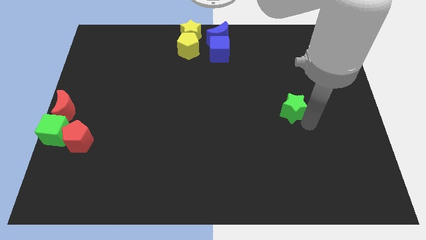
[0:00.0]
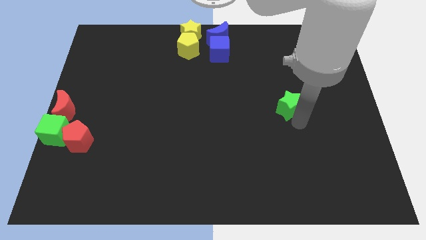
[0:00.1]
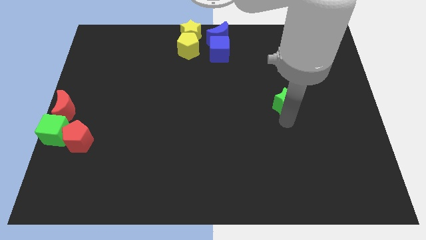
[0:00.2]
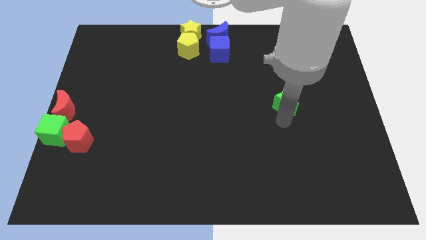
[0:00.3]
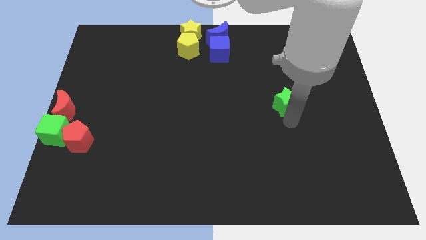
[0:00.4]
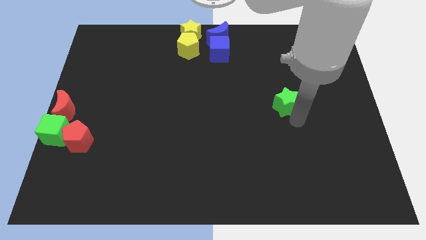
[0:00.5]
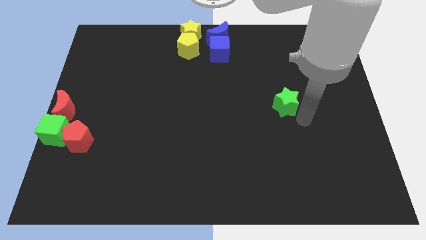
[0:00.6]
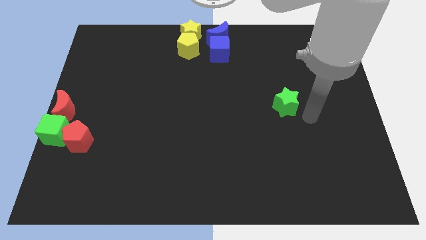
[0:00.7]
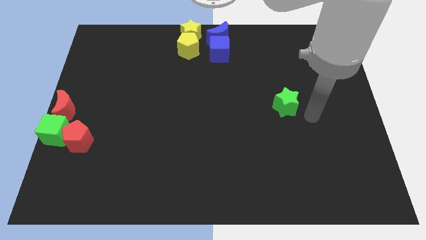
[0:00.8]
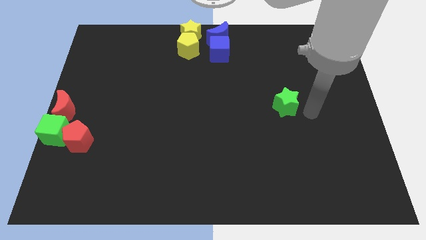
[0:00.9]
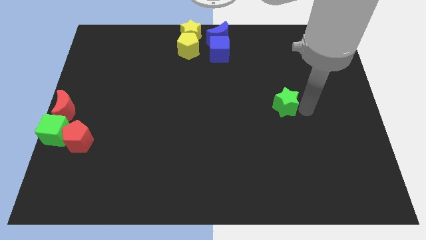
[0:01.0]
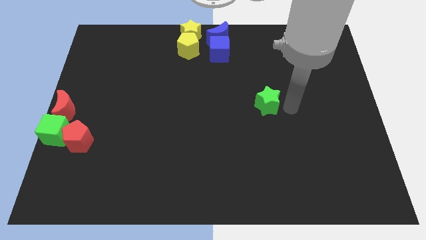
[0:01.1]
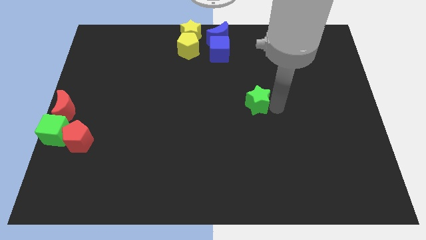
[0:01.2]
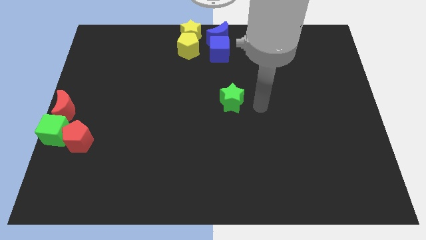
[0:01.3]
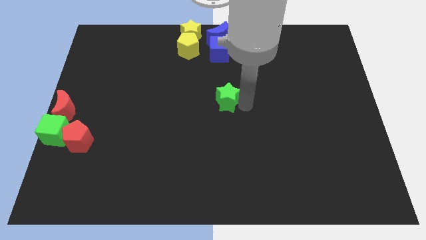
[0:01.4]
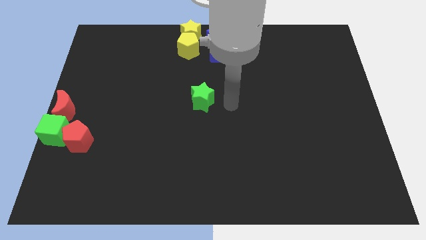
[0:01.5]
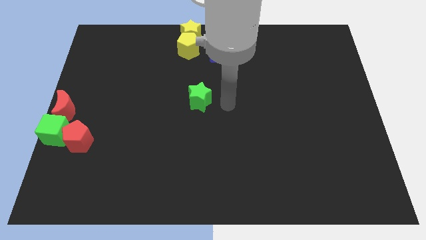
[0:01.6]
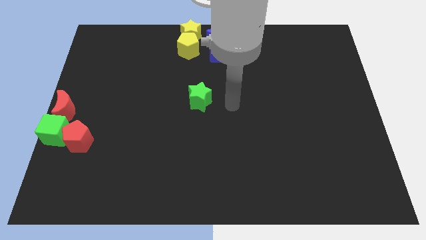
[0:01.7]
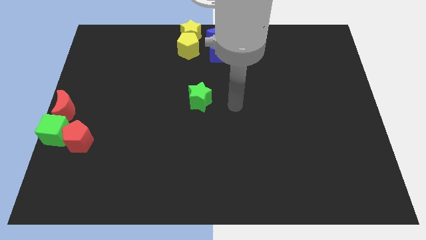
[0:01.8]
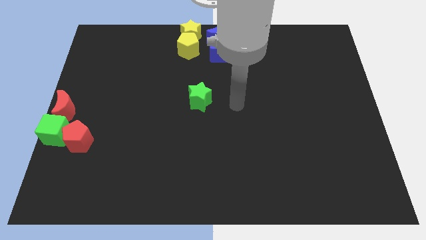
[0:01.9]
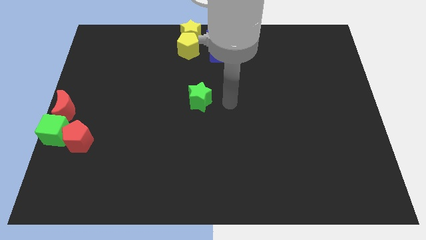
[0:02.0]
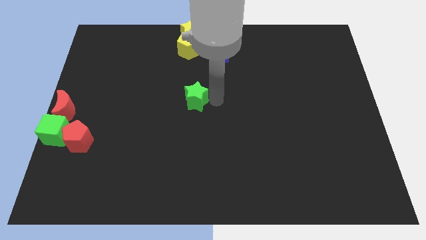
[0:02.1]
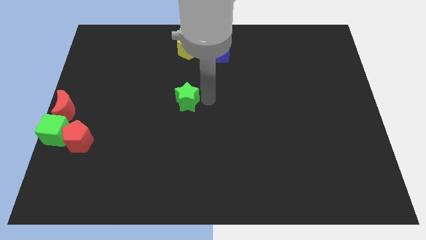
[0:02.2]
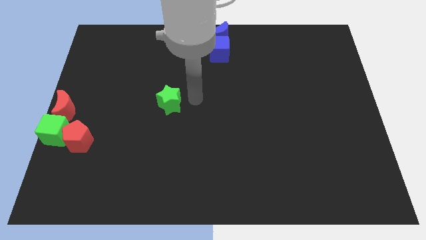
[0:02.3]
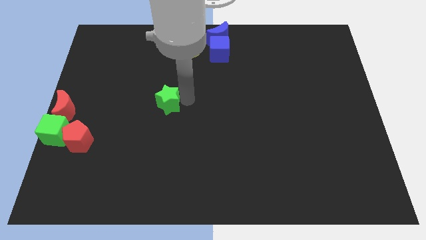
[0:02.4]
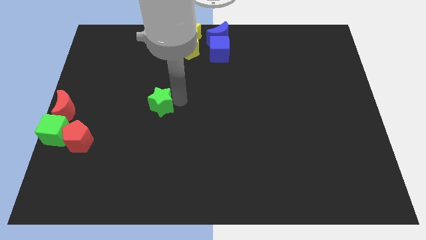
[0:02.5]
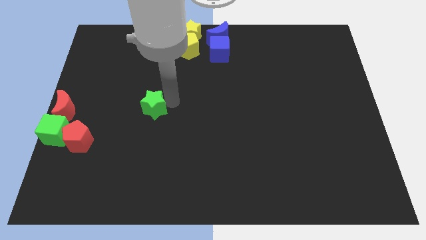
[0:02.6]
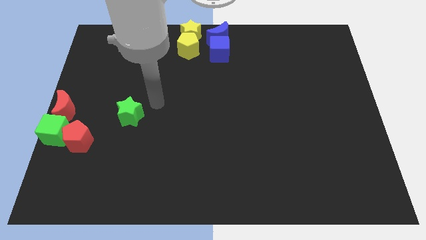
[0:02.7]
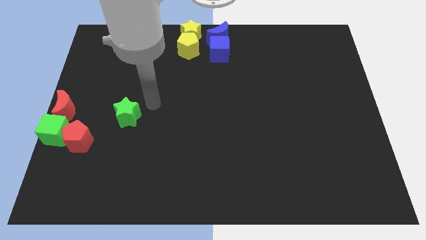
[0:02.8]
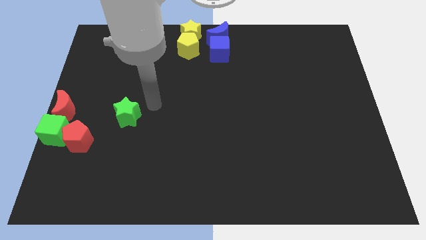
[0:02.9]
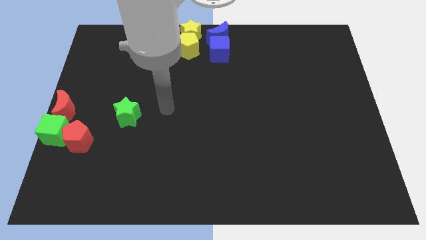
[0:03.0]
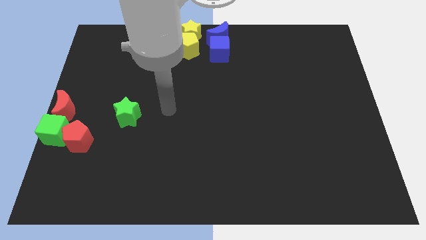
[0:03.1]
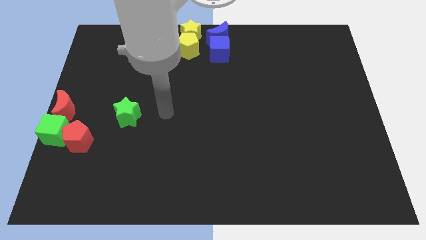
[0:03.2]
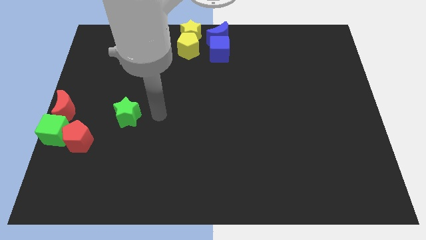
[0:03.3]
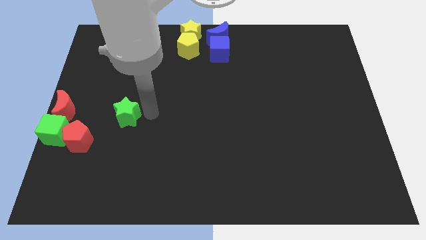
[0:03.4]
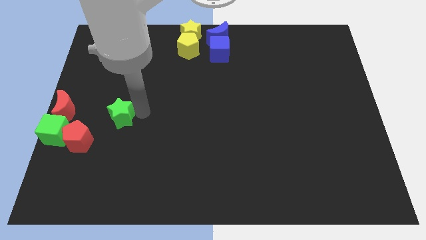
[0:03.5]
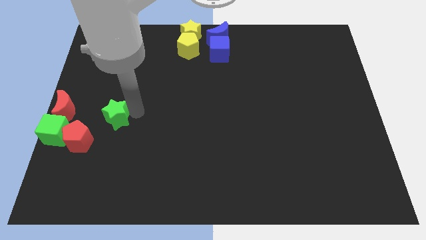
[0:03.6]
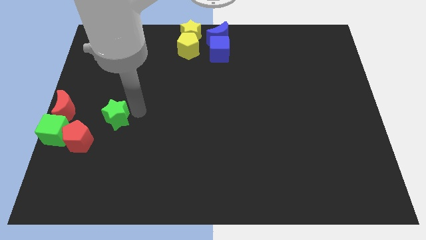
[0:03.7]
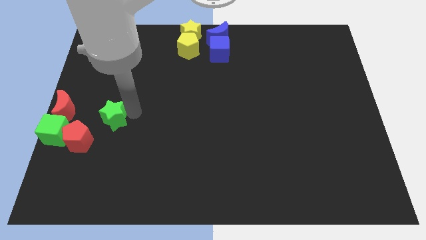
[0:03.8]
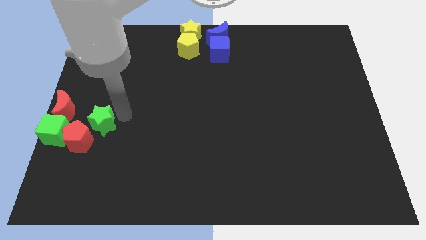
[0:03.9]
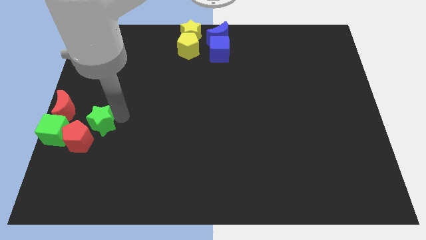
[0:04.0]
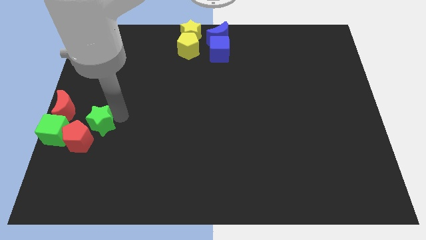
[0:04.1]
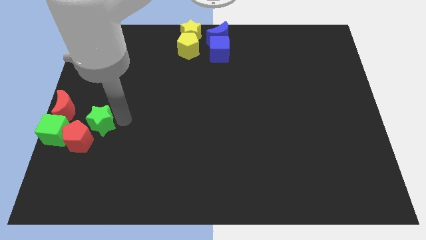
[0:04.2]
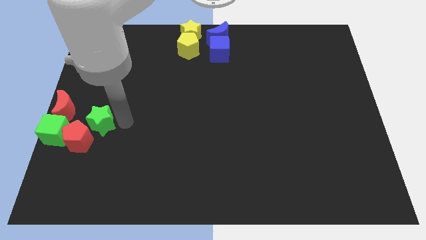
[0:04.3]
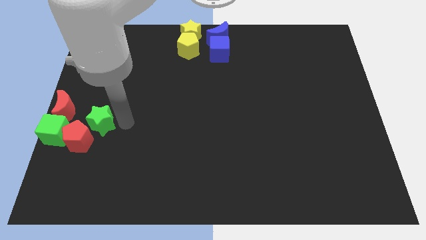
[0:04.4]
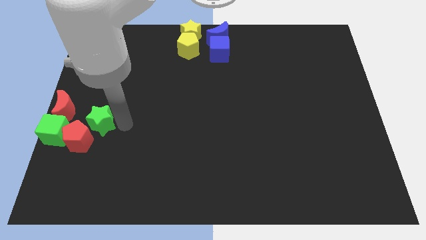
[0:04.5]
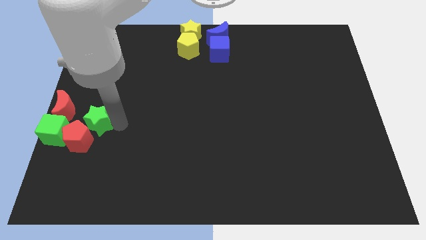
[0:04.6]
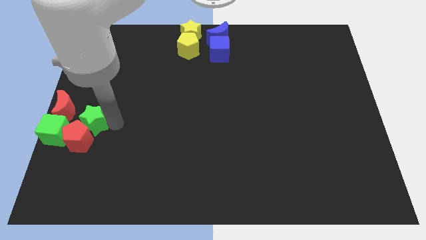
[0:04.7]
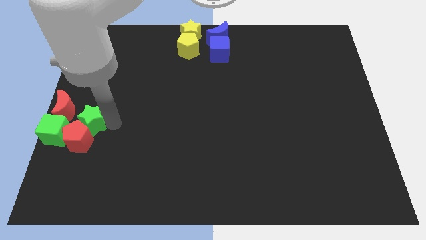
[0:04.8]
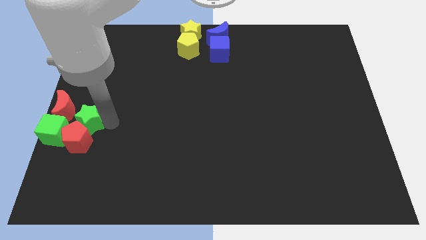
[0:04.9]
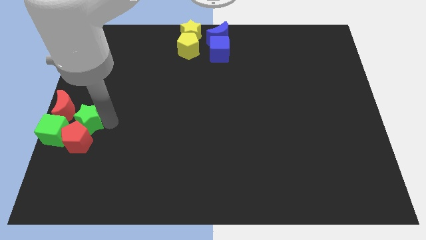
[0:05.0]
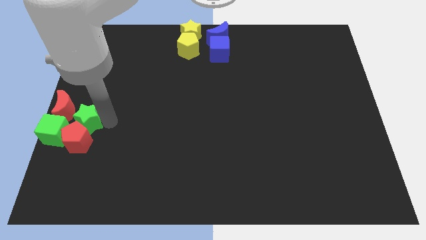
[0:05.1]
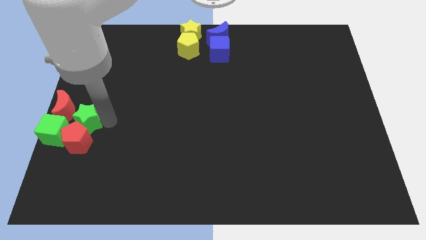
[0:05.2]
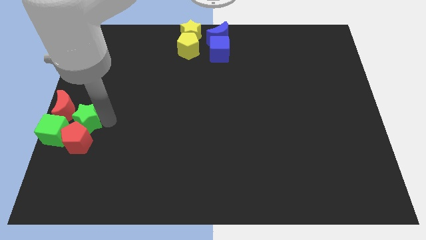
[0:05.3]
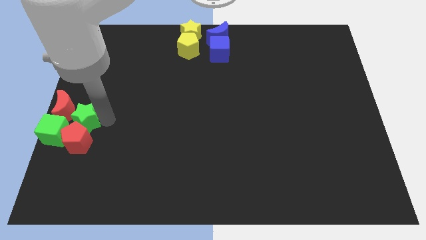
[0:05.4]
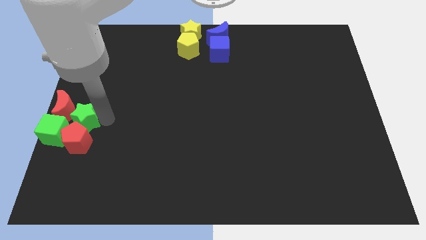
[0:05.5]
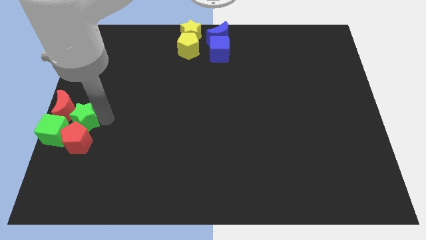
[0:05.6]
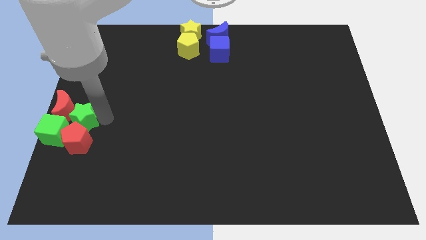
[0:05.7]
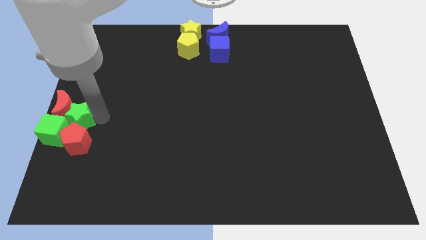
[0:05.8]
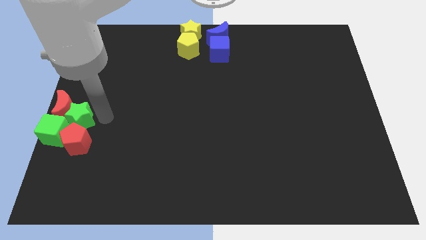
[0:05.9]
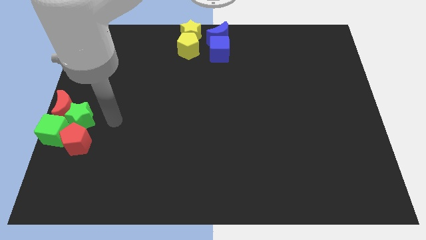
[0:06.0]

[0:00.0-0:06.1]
push green star into the green cube

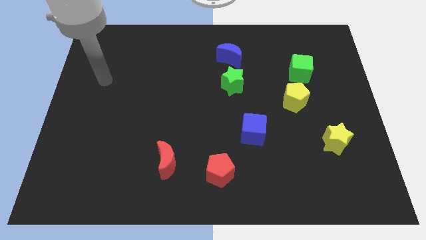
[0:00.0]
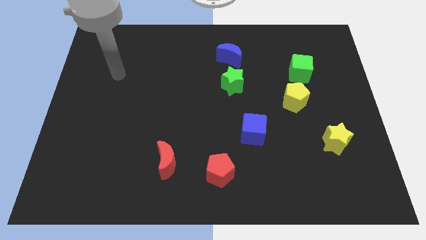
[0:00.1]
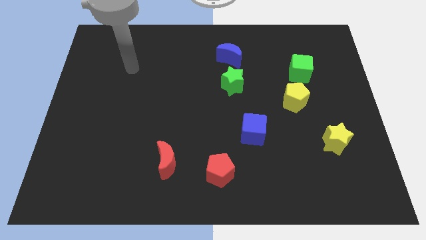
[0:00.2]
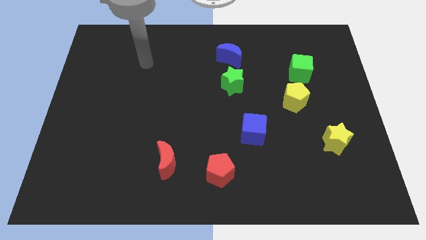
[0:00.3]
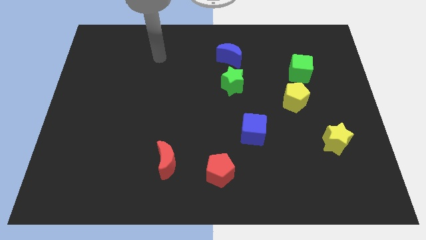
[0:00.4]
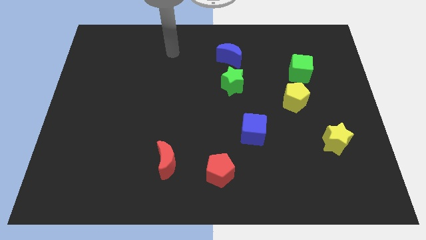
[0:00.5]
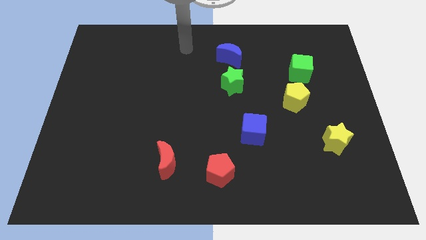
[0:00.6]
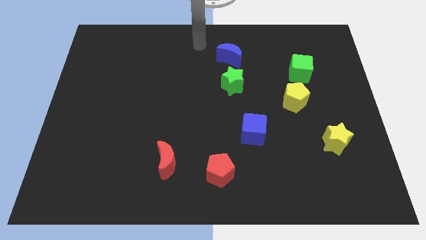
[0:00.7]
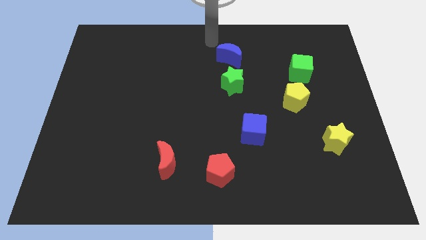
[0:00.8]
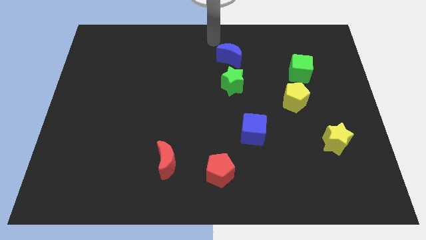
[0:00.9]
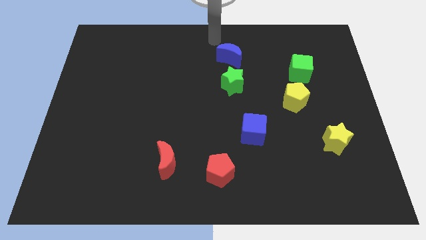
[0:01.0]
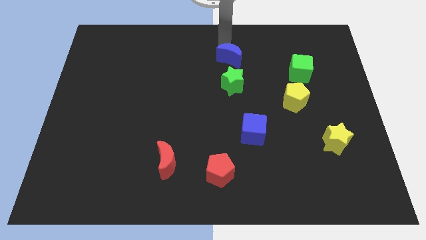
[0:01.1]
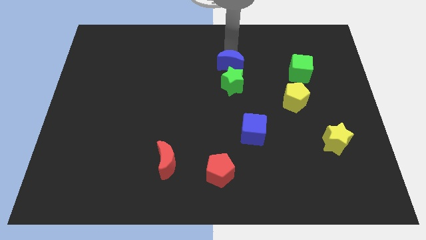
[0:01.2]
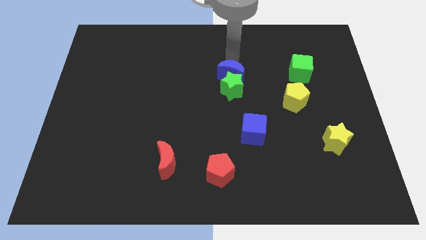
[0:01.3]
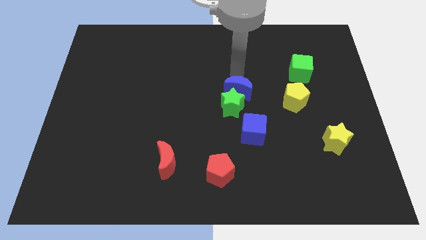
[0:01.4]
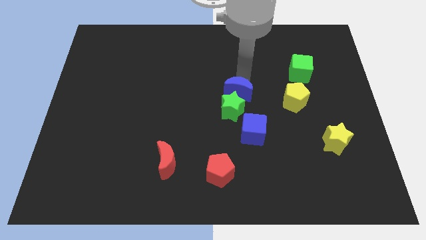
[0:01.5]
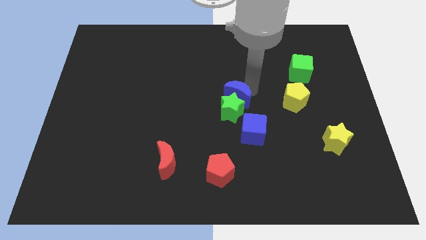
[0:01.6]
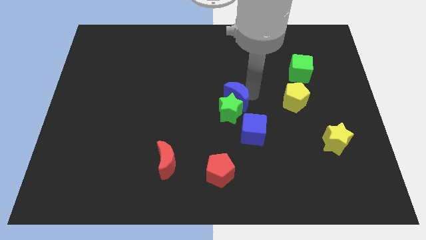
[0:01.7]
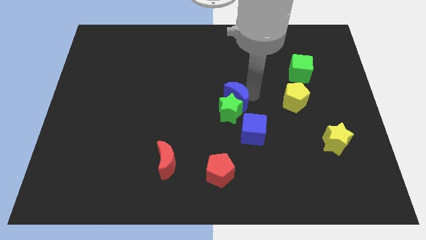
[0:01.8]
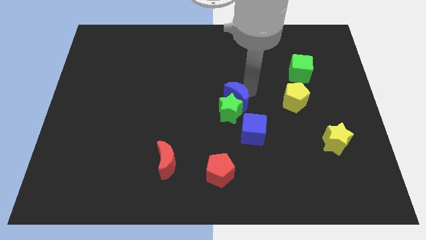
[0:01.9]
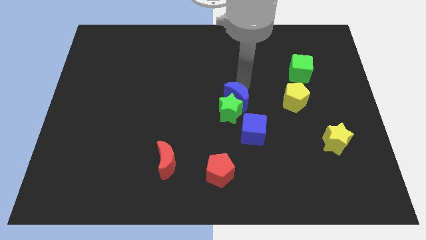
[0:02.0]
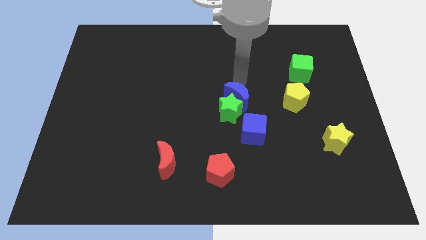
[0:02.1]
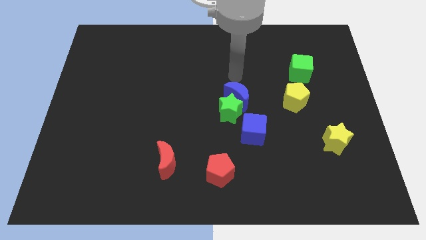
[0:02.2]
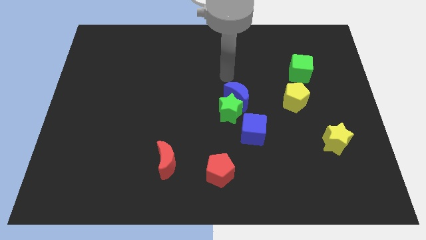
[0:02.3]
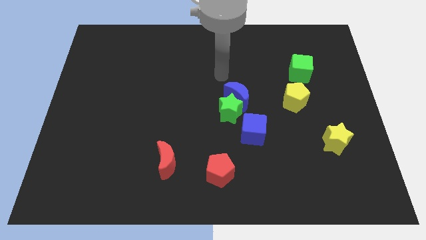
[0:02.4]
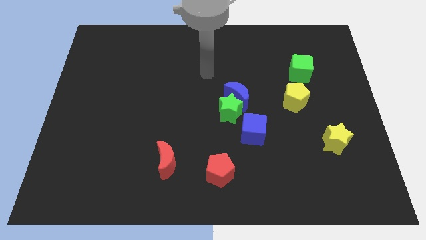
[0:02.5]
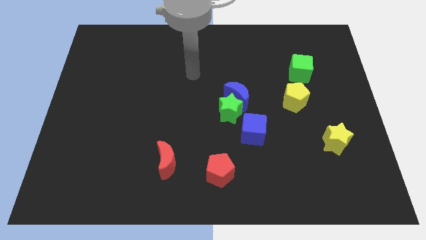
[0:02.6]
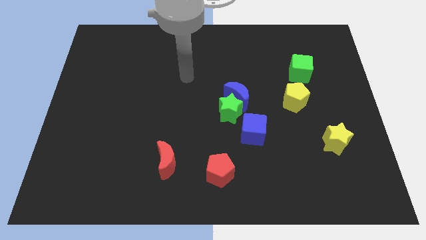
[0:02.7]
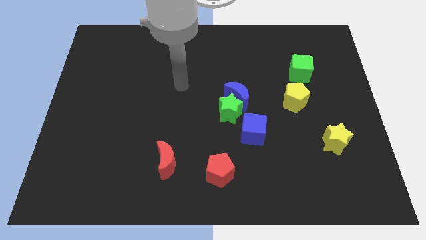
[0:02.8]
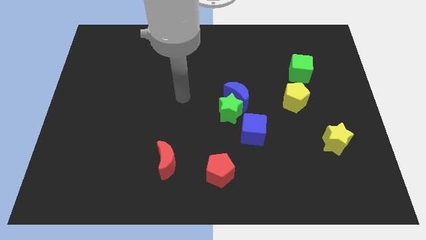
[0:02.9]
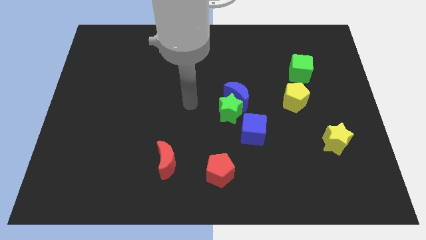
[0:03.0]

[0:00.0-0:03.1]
slide the green star and blue moon to the center
